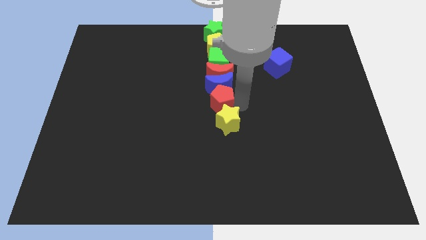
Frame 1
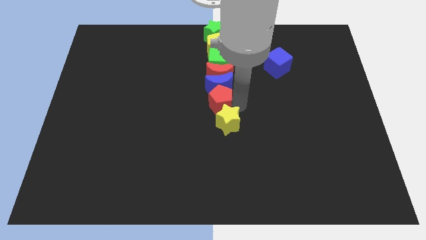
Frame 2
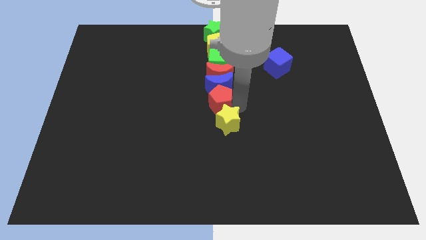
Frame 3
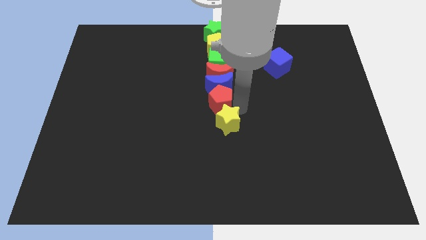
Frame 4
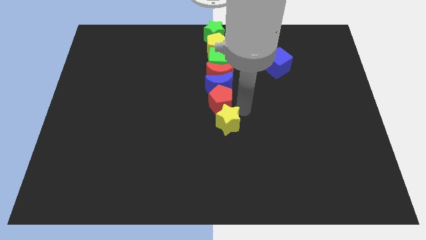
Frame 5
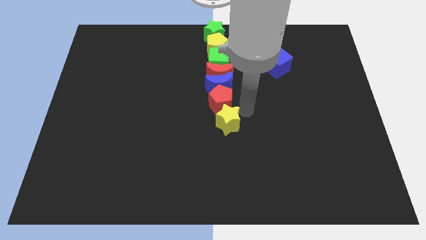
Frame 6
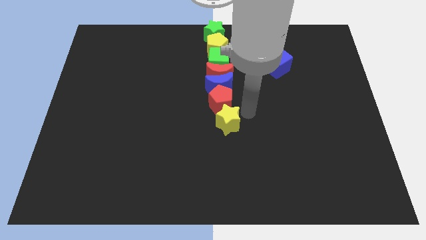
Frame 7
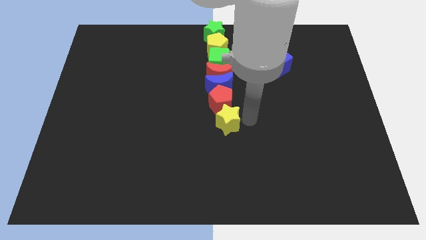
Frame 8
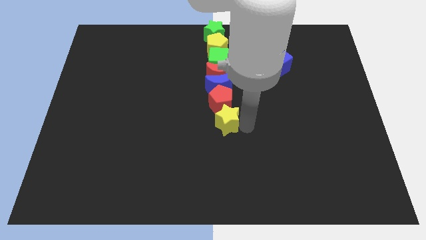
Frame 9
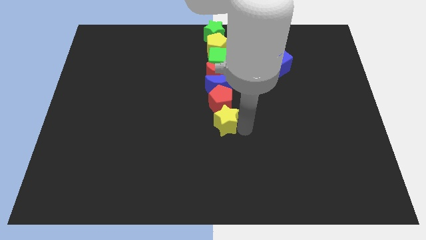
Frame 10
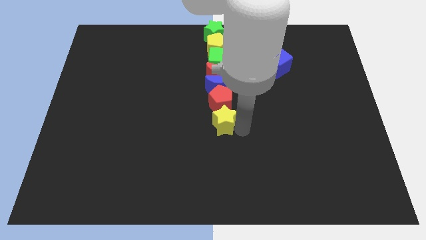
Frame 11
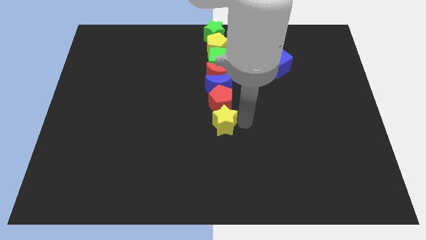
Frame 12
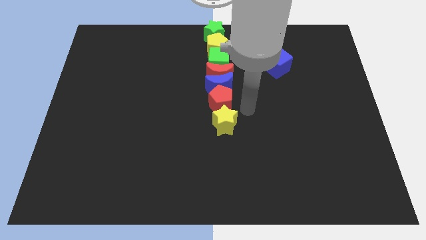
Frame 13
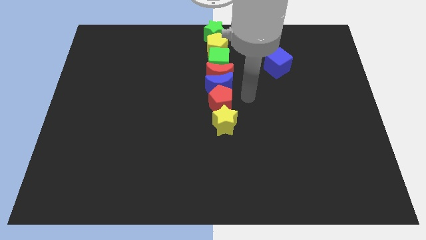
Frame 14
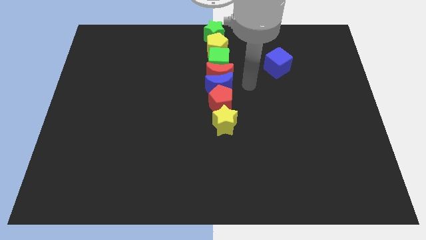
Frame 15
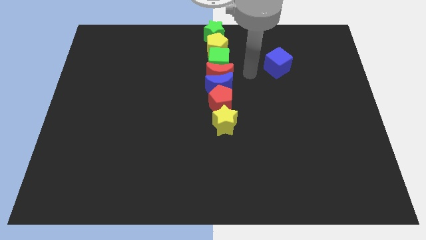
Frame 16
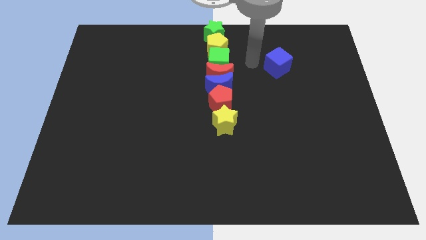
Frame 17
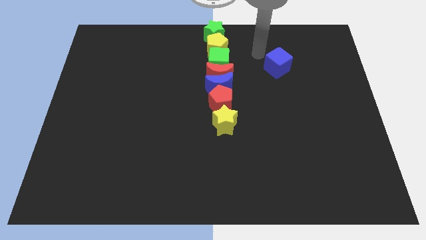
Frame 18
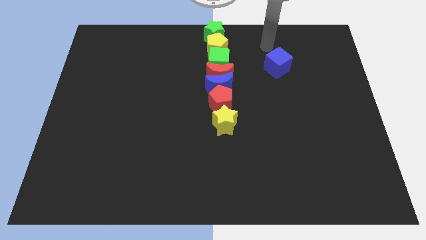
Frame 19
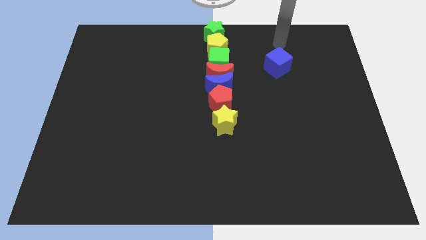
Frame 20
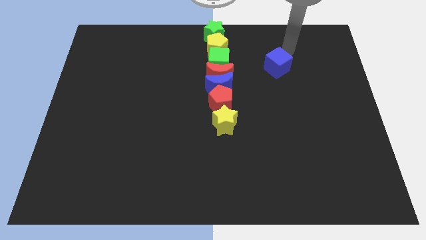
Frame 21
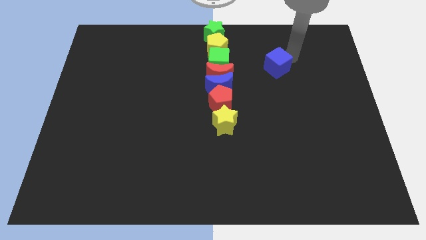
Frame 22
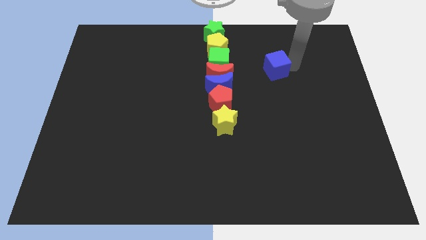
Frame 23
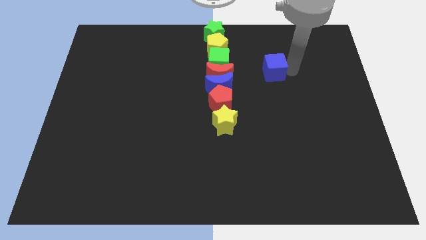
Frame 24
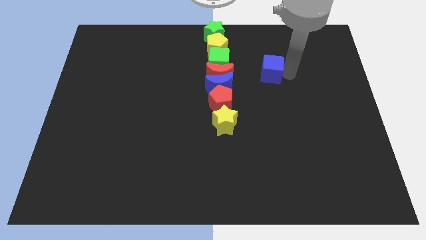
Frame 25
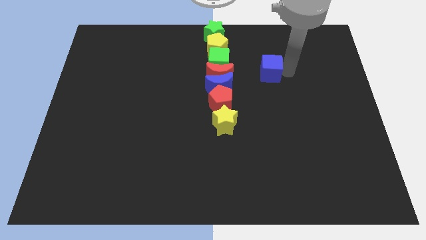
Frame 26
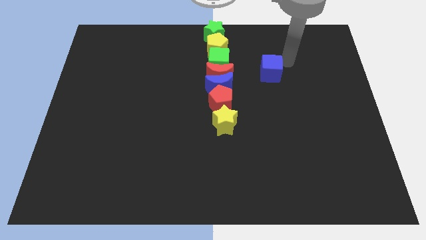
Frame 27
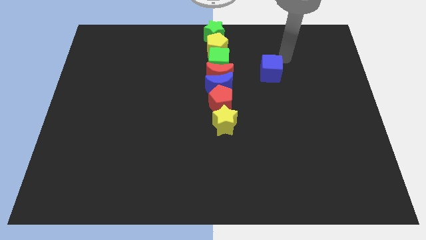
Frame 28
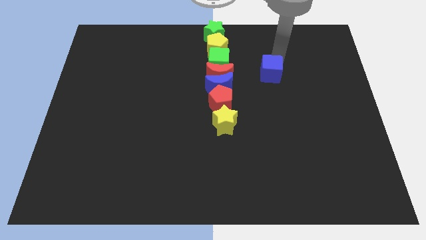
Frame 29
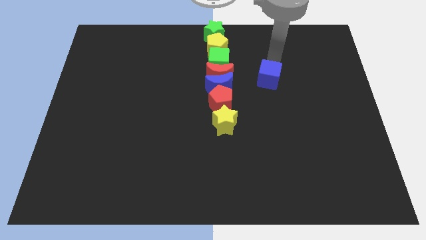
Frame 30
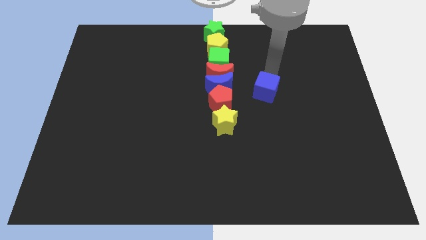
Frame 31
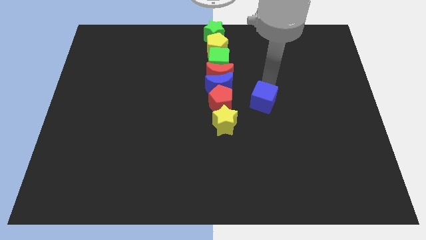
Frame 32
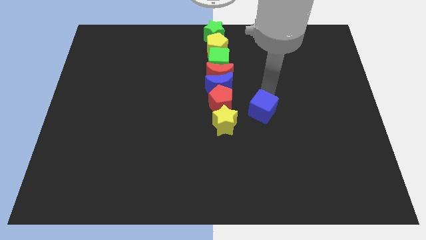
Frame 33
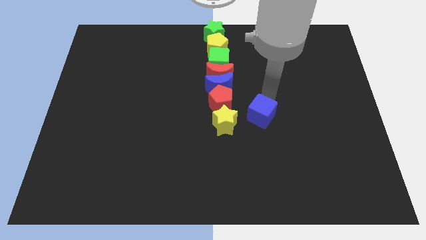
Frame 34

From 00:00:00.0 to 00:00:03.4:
adjust the red pentagon yellow star and the blue cube to the left of the board

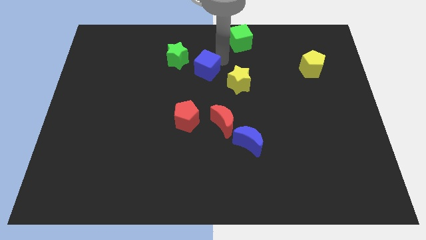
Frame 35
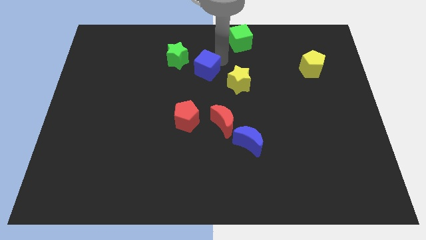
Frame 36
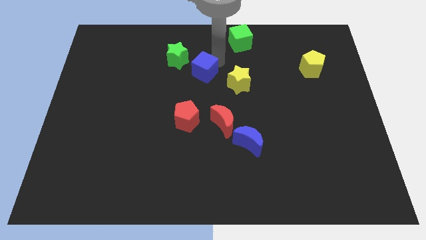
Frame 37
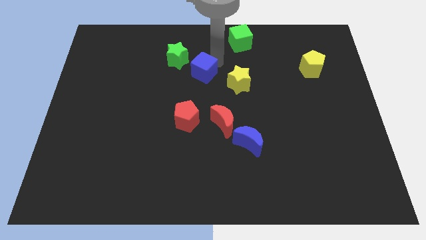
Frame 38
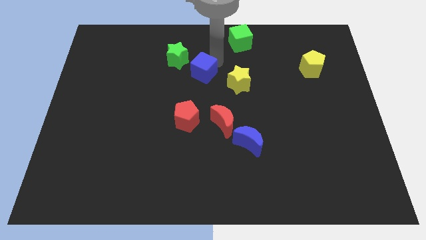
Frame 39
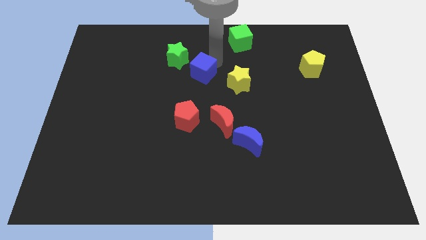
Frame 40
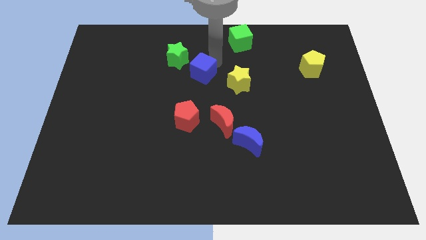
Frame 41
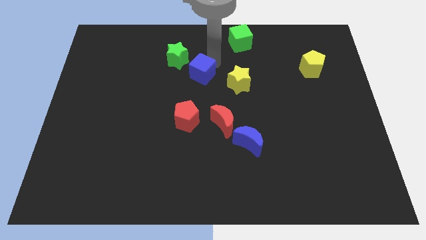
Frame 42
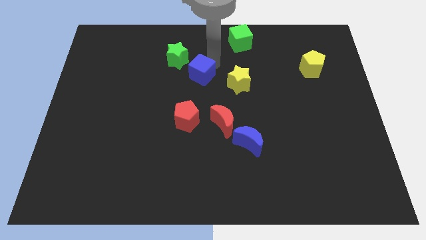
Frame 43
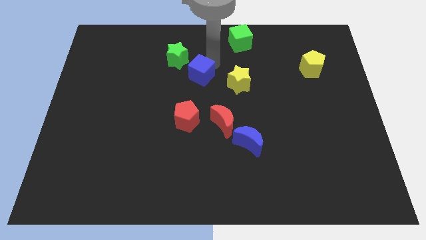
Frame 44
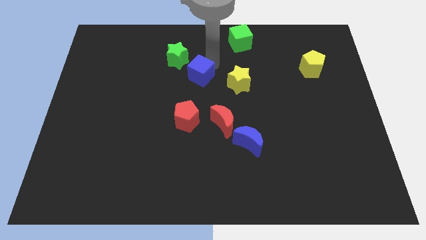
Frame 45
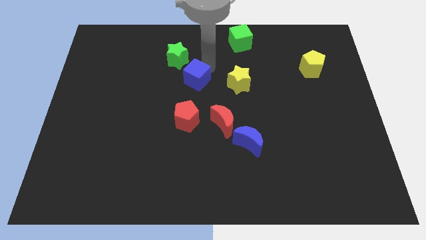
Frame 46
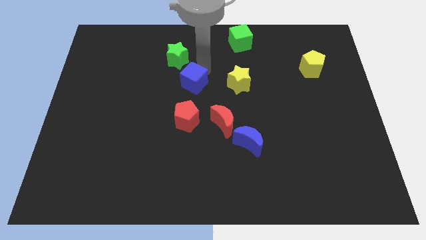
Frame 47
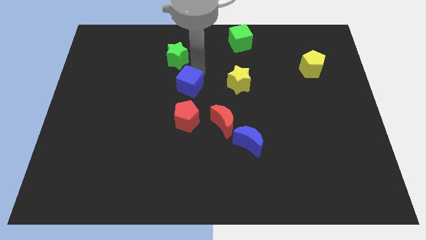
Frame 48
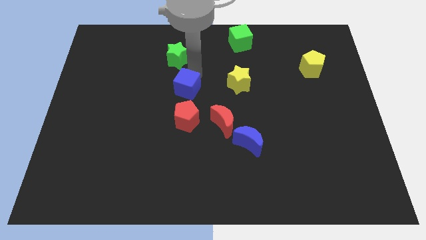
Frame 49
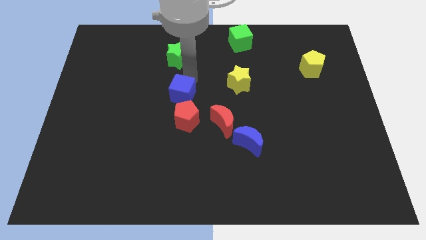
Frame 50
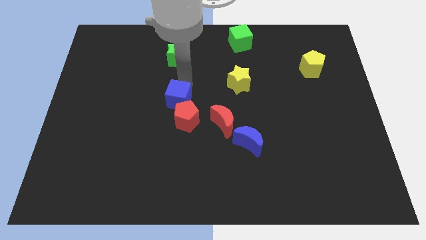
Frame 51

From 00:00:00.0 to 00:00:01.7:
move blue cube above the red pentagon

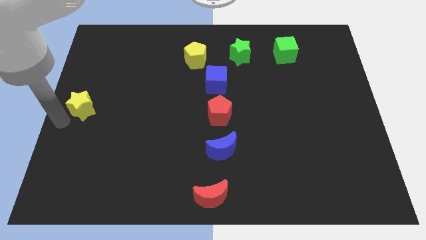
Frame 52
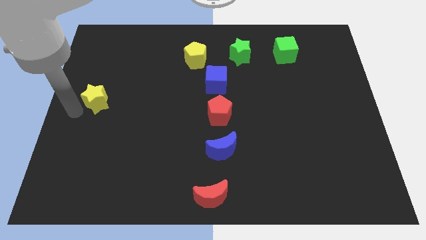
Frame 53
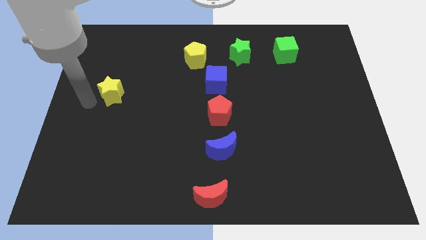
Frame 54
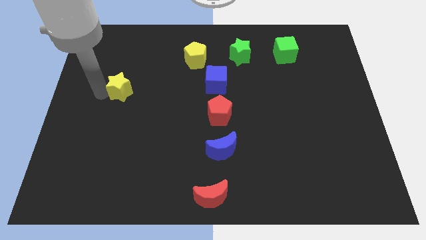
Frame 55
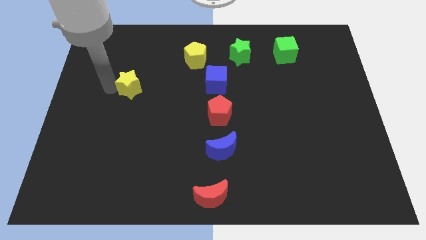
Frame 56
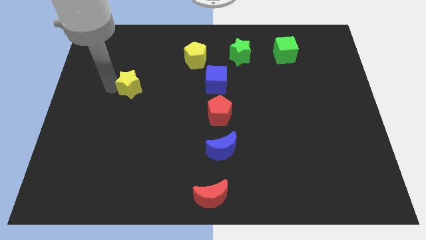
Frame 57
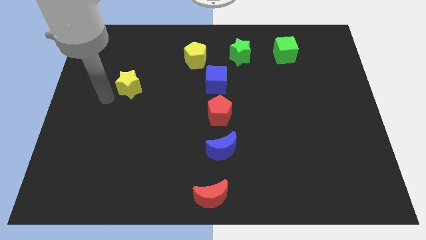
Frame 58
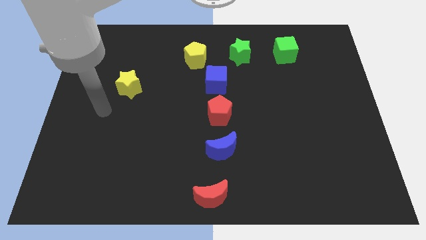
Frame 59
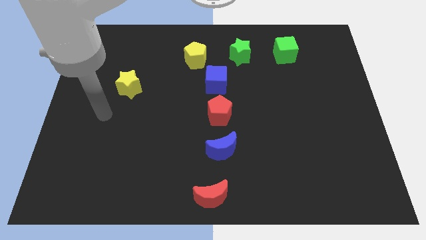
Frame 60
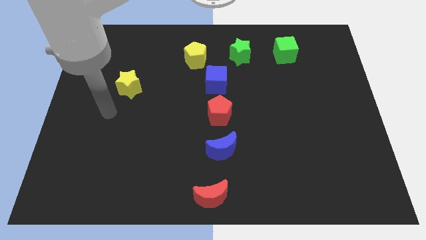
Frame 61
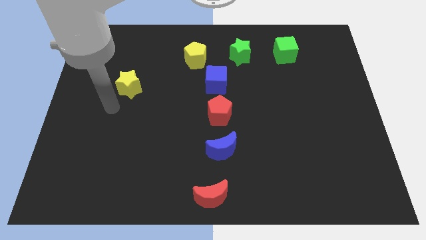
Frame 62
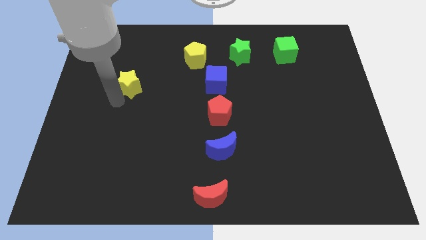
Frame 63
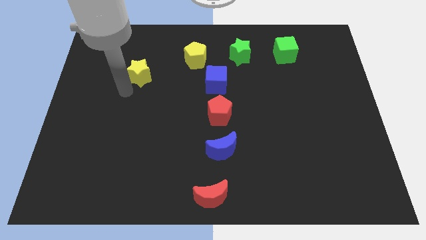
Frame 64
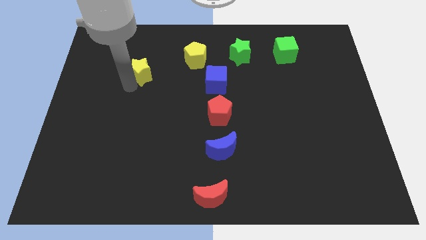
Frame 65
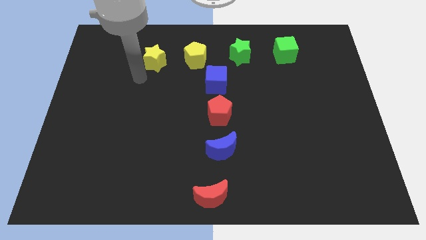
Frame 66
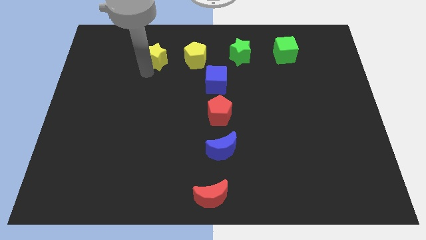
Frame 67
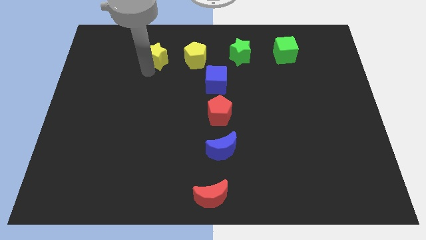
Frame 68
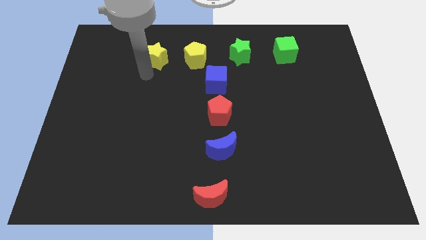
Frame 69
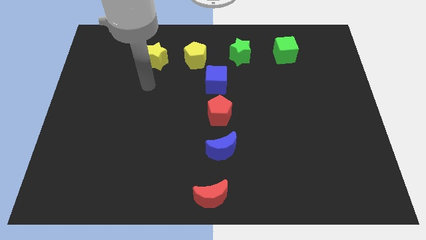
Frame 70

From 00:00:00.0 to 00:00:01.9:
push the yellow star to the left of the yellow pentagon

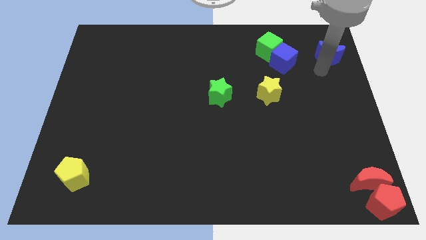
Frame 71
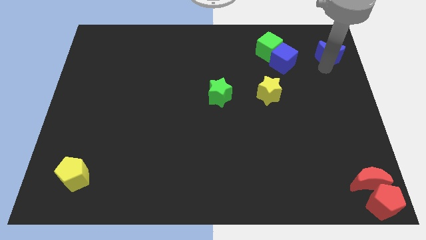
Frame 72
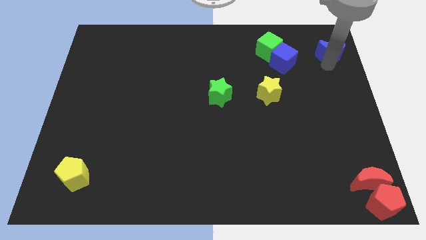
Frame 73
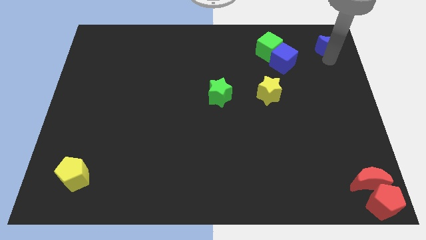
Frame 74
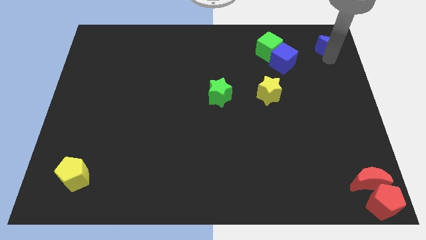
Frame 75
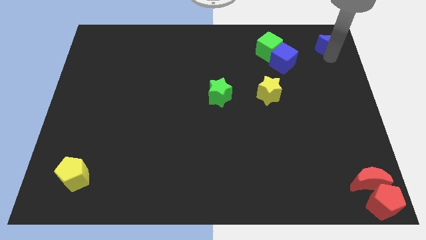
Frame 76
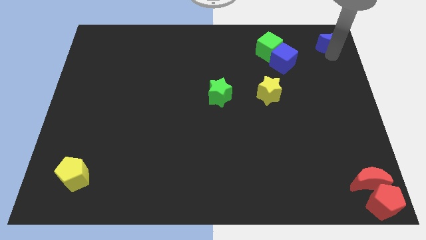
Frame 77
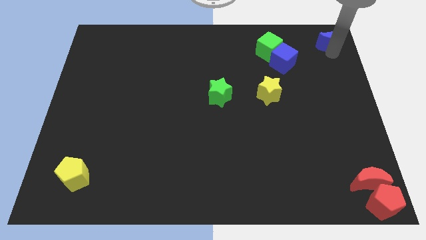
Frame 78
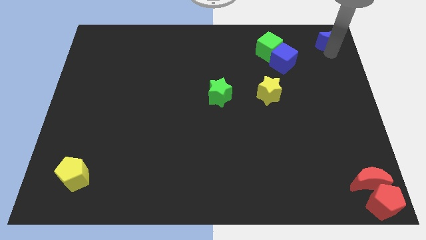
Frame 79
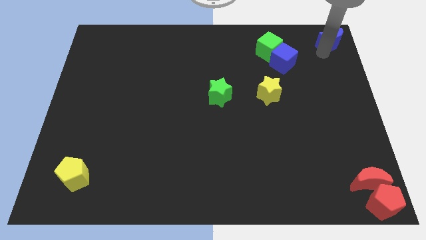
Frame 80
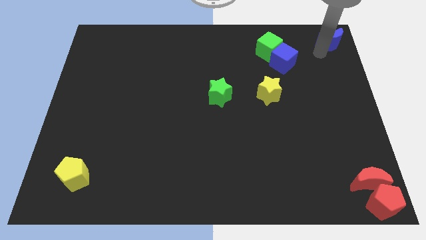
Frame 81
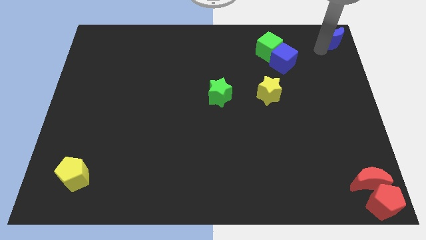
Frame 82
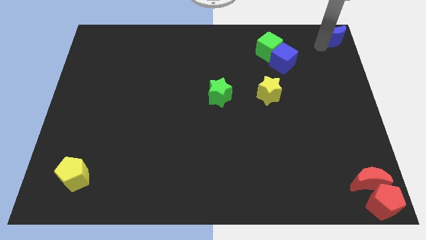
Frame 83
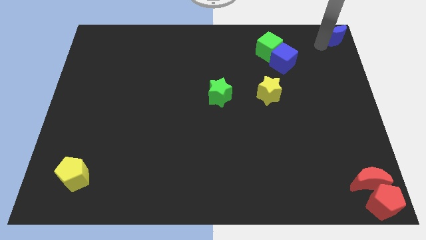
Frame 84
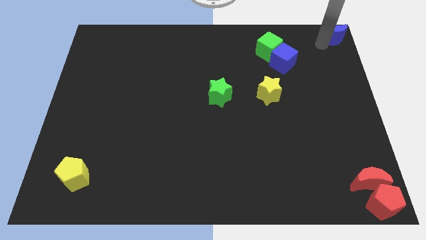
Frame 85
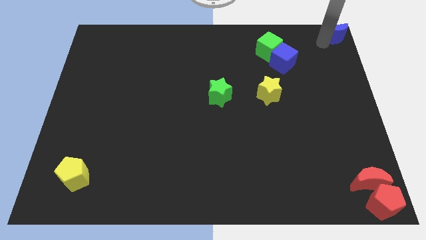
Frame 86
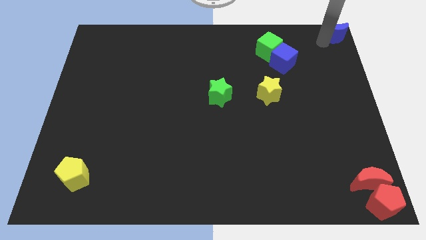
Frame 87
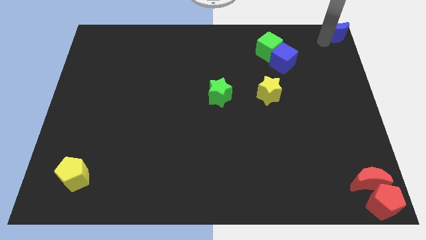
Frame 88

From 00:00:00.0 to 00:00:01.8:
push the blue crescent to the top right of the board

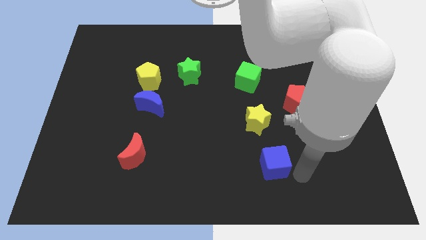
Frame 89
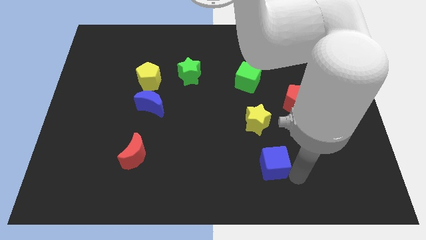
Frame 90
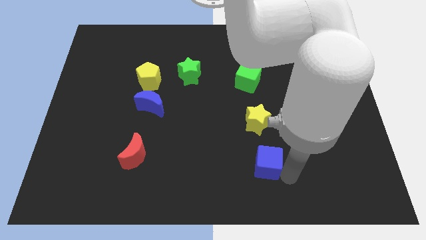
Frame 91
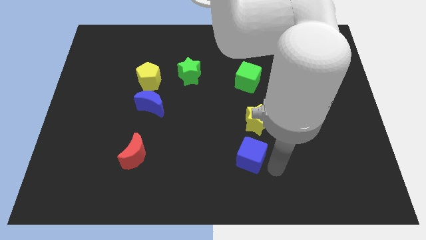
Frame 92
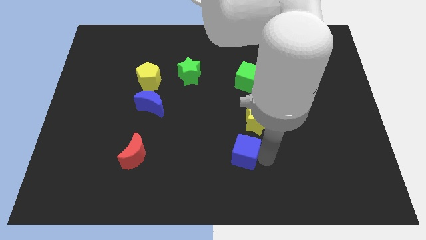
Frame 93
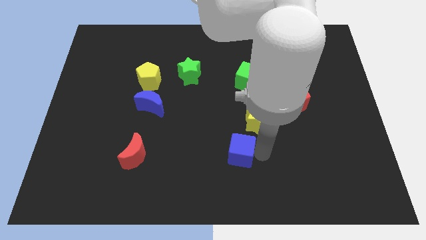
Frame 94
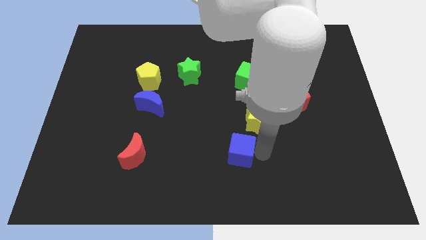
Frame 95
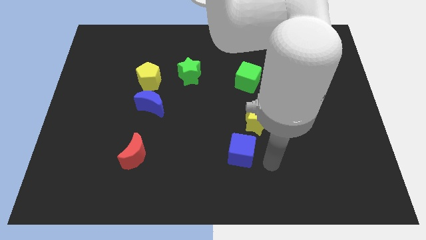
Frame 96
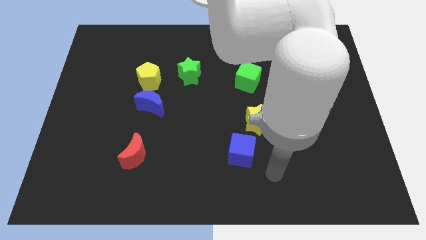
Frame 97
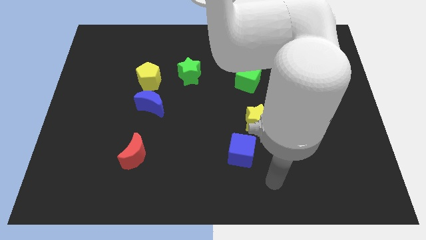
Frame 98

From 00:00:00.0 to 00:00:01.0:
place the blue cube parallel right to red crescent
